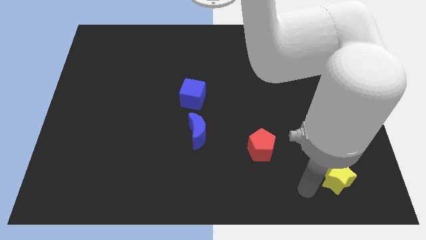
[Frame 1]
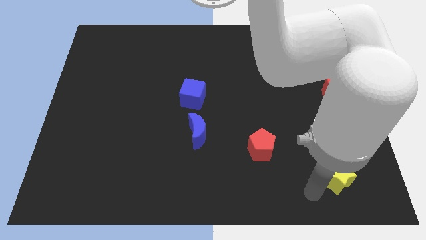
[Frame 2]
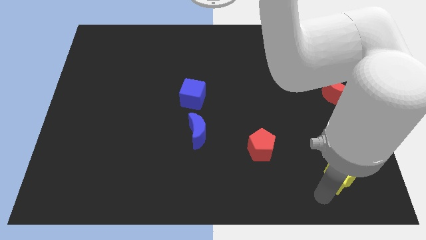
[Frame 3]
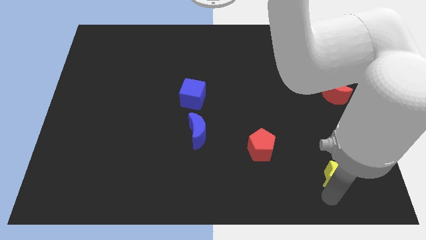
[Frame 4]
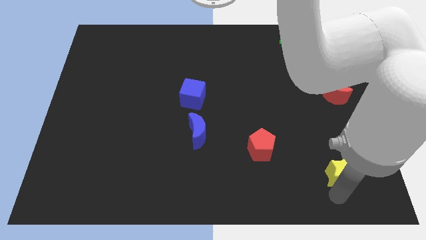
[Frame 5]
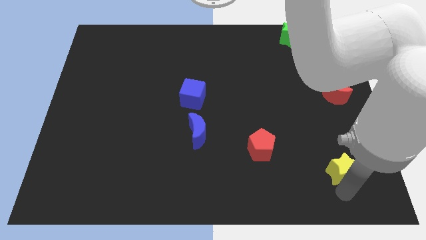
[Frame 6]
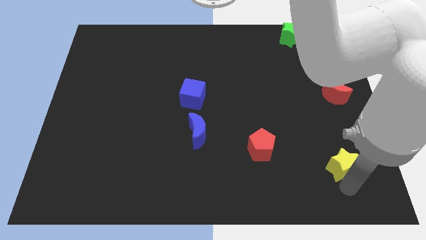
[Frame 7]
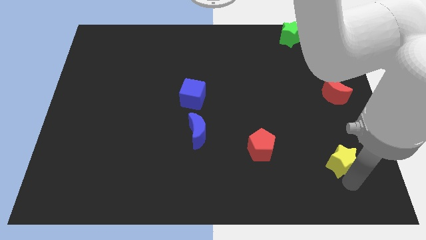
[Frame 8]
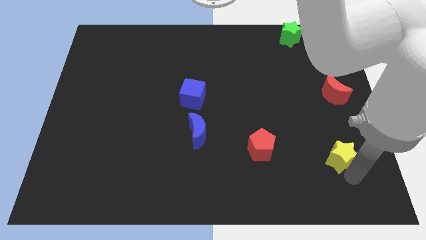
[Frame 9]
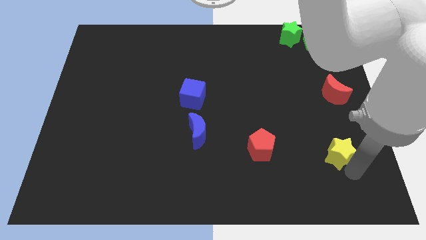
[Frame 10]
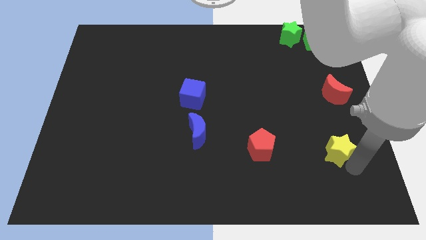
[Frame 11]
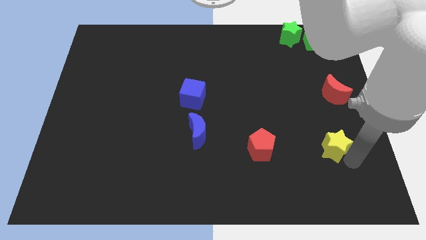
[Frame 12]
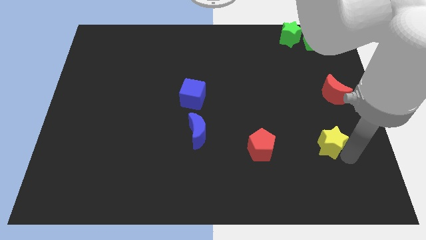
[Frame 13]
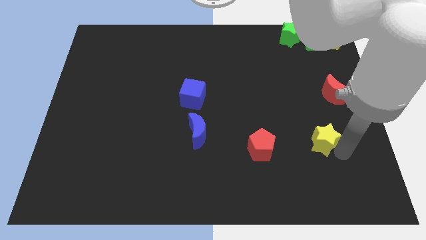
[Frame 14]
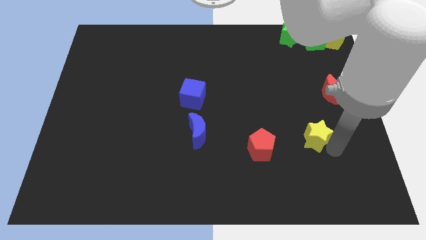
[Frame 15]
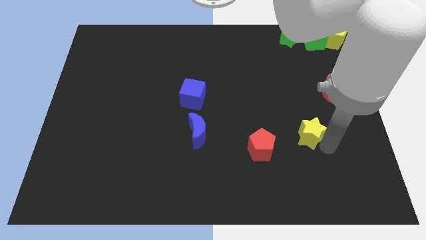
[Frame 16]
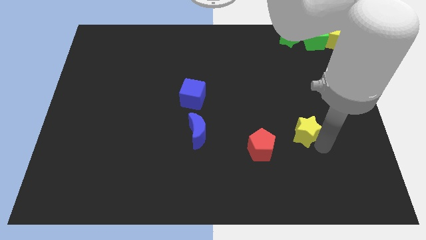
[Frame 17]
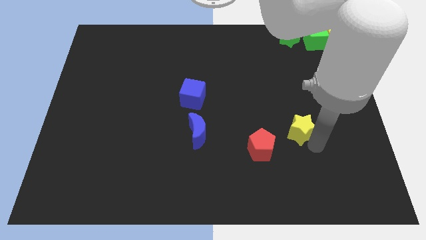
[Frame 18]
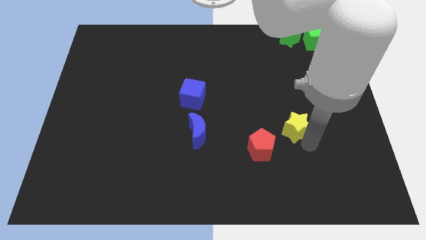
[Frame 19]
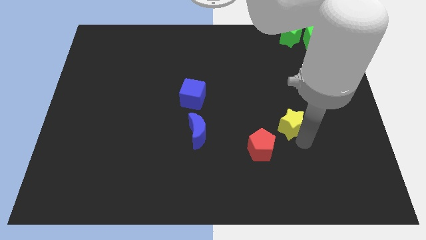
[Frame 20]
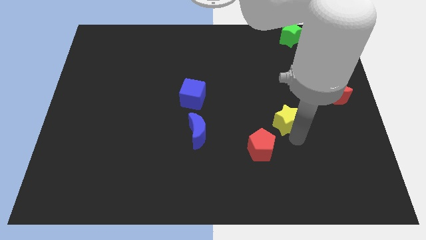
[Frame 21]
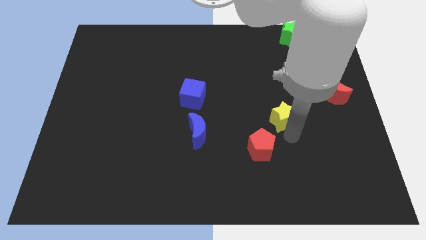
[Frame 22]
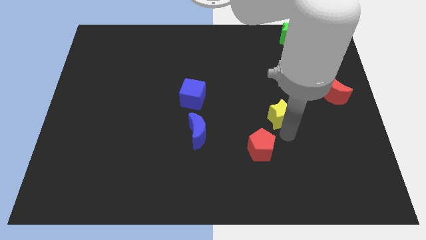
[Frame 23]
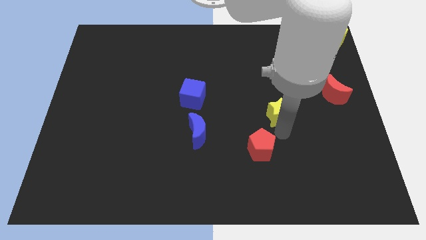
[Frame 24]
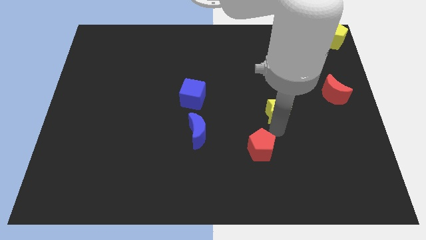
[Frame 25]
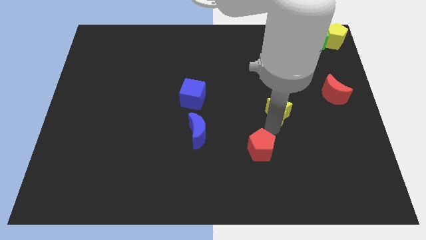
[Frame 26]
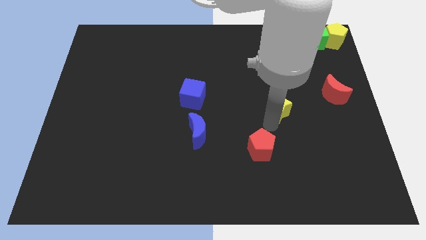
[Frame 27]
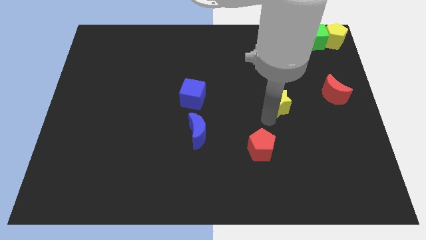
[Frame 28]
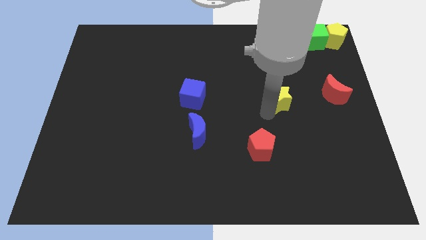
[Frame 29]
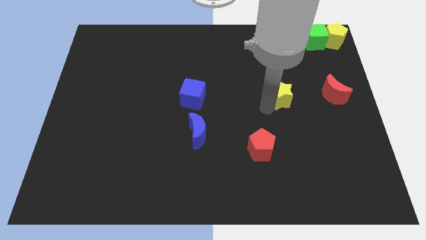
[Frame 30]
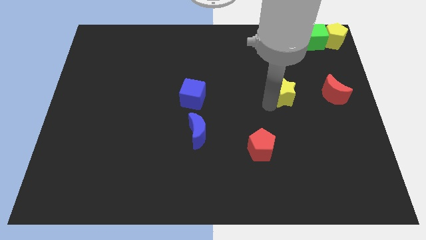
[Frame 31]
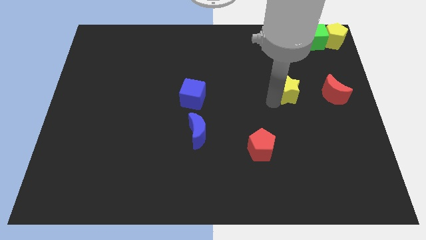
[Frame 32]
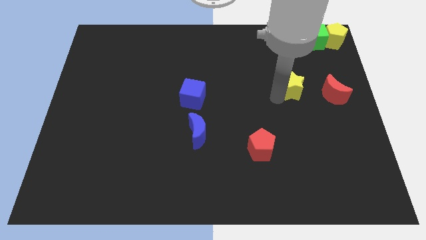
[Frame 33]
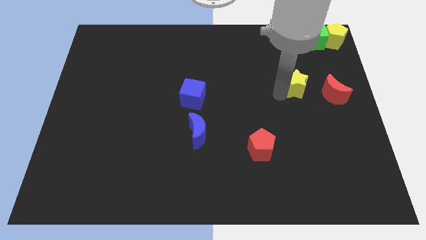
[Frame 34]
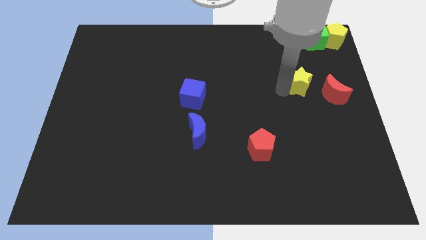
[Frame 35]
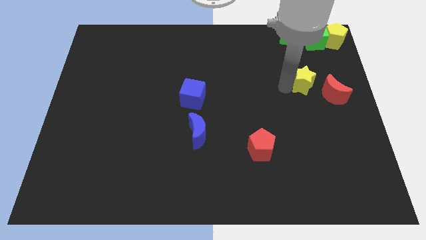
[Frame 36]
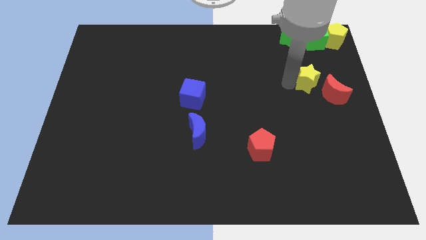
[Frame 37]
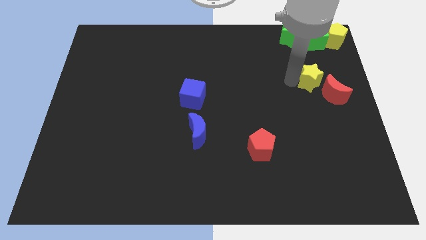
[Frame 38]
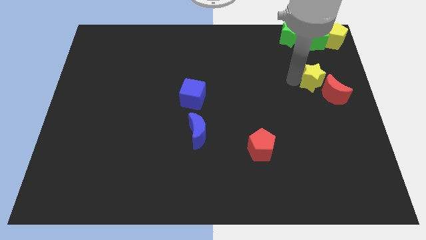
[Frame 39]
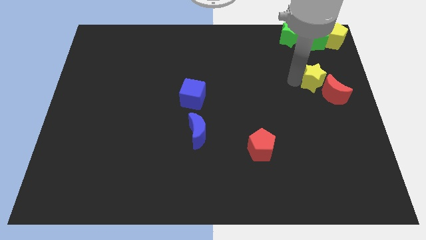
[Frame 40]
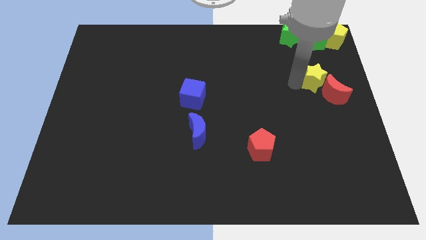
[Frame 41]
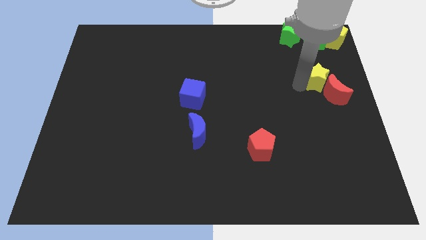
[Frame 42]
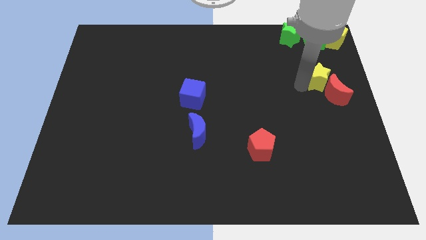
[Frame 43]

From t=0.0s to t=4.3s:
touch the left top side of the red moon with the yellow star

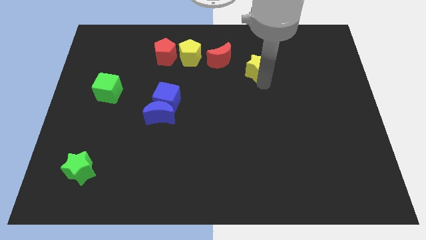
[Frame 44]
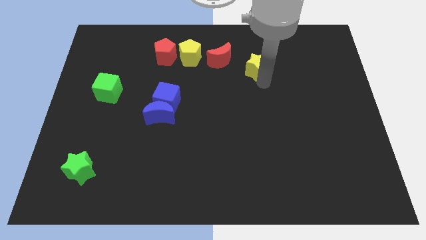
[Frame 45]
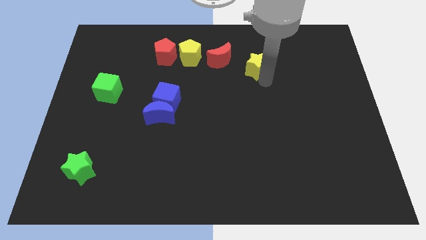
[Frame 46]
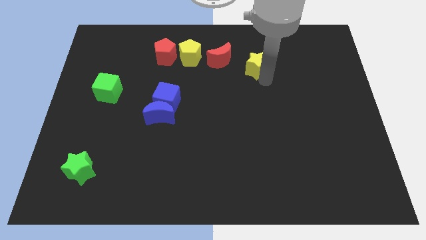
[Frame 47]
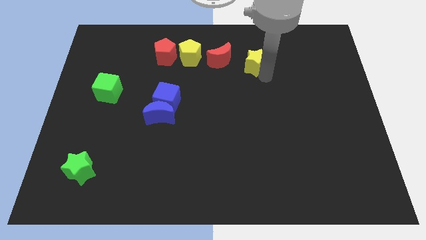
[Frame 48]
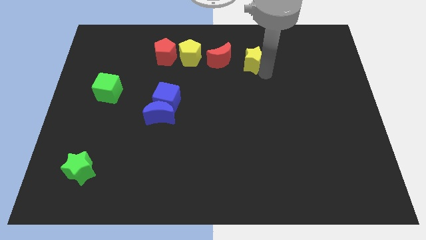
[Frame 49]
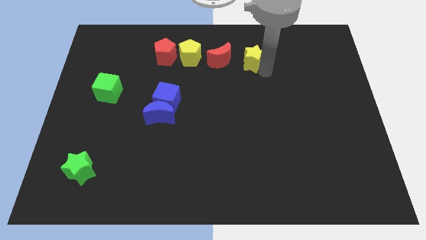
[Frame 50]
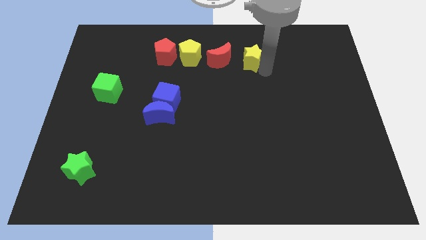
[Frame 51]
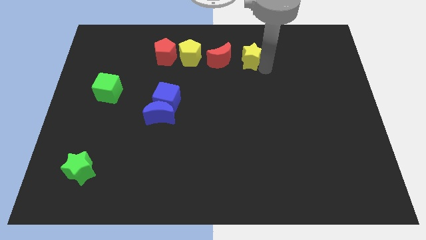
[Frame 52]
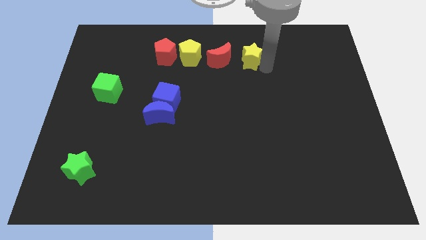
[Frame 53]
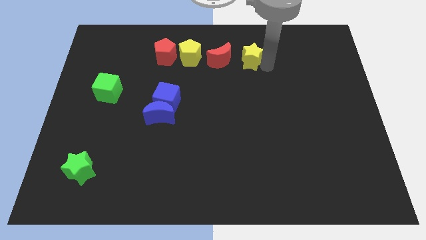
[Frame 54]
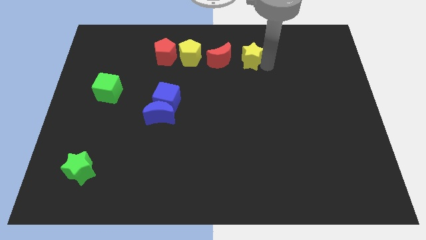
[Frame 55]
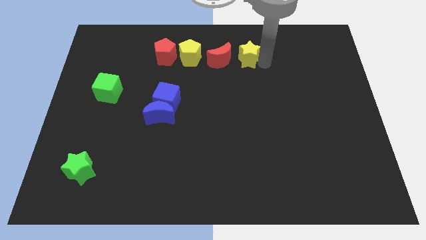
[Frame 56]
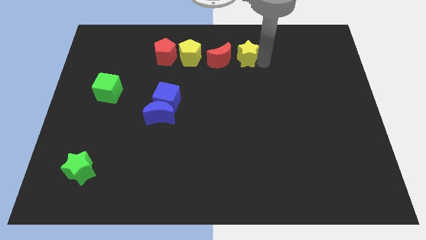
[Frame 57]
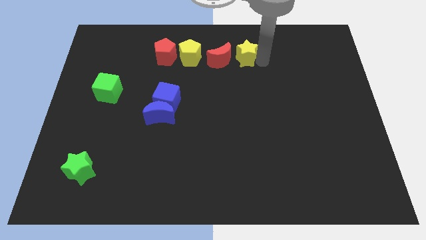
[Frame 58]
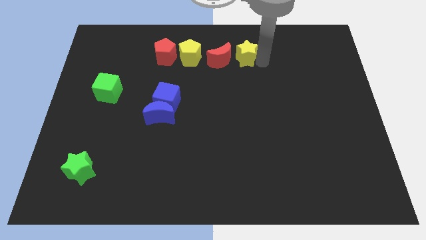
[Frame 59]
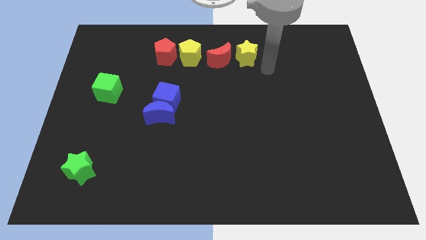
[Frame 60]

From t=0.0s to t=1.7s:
move the yellow star to the right side of the red crescent

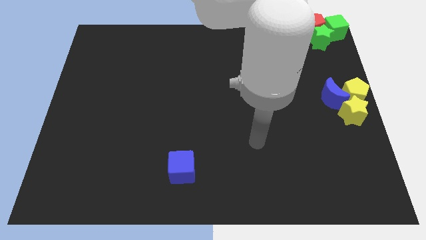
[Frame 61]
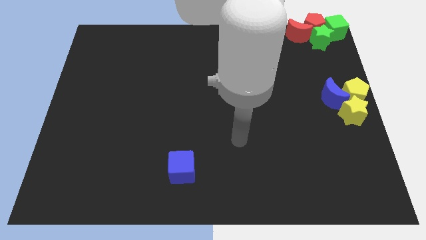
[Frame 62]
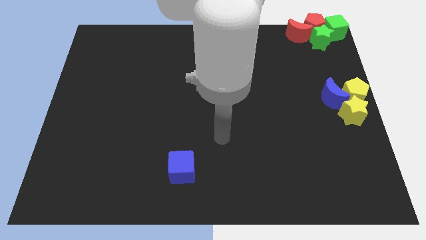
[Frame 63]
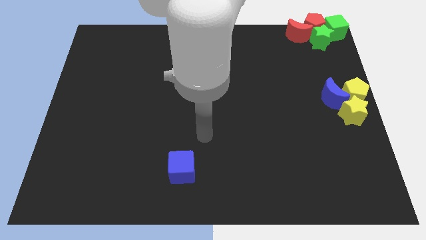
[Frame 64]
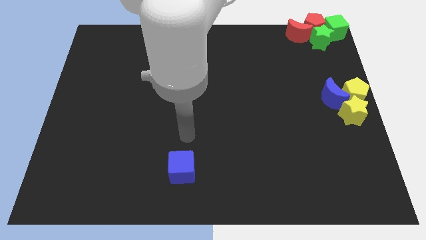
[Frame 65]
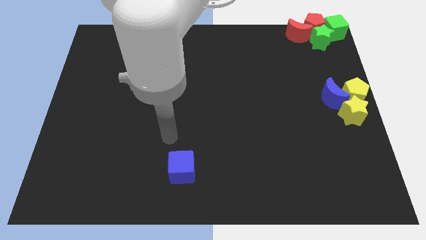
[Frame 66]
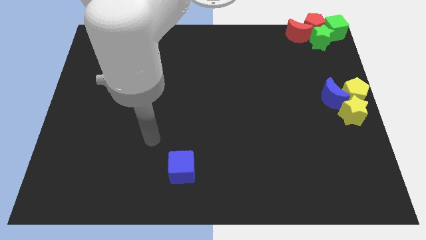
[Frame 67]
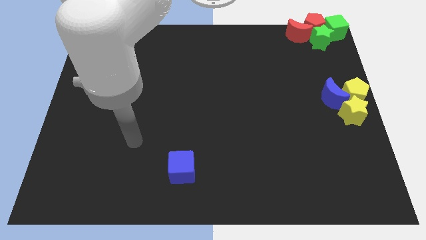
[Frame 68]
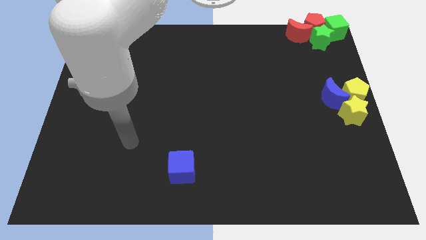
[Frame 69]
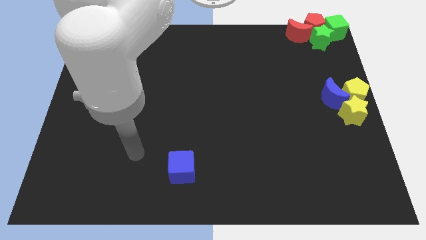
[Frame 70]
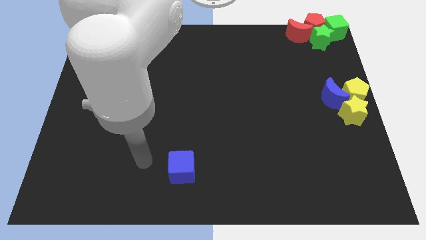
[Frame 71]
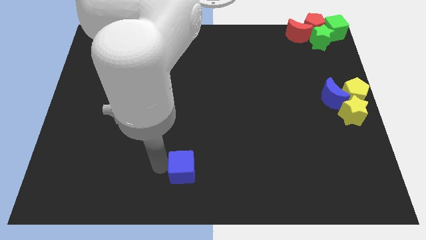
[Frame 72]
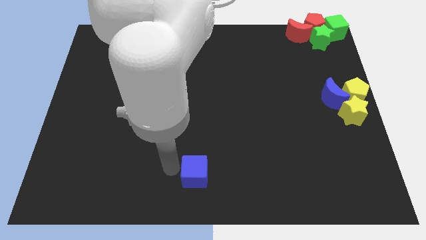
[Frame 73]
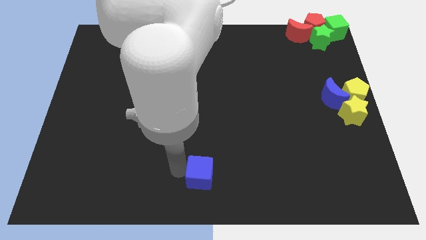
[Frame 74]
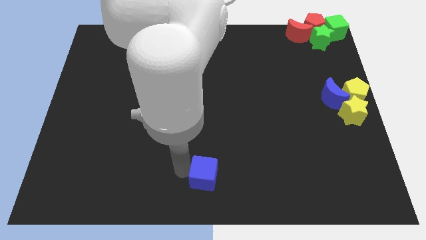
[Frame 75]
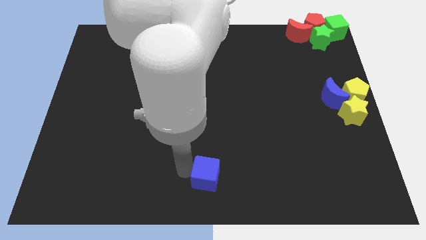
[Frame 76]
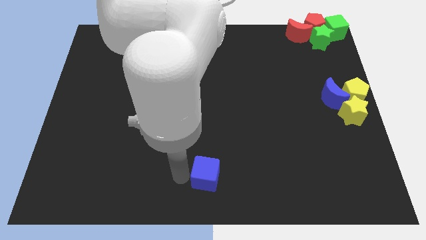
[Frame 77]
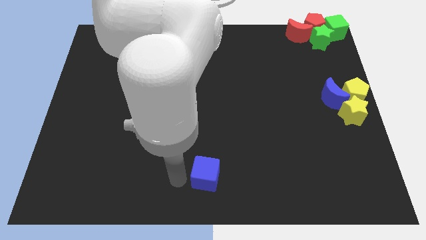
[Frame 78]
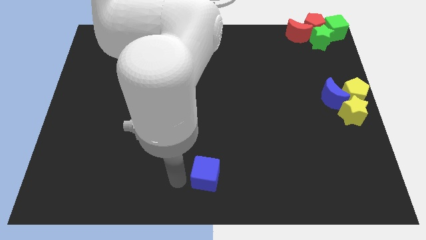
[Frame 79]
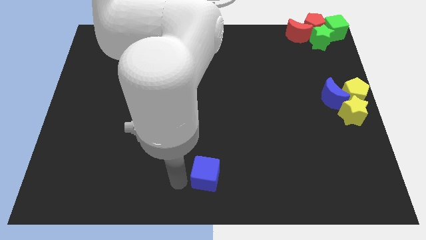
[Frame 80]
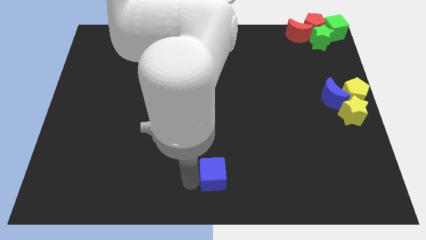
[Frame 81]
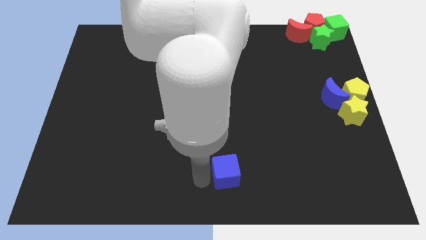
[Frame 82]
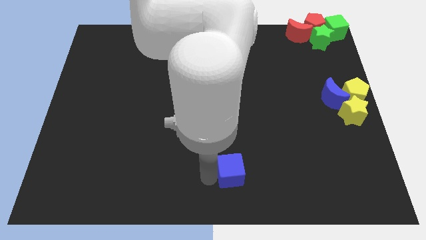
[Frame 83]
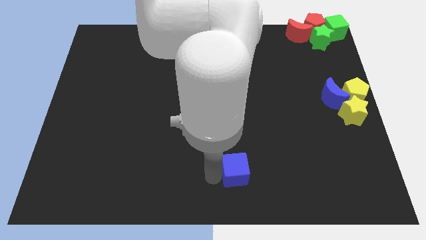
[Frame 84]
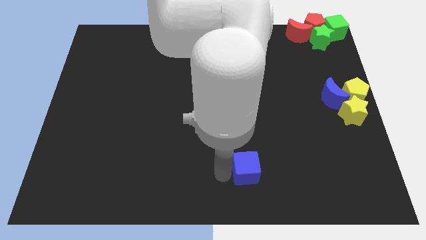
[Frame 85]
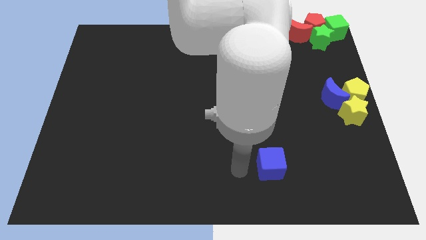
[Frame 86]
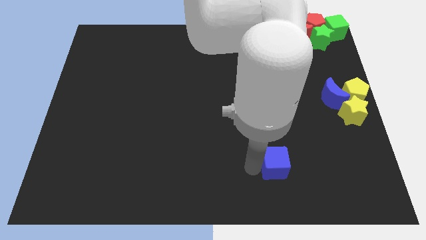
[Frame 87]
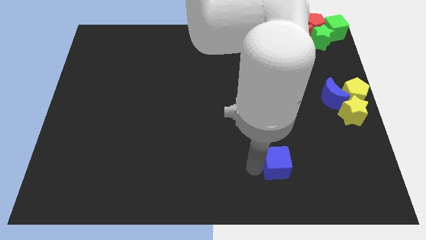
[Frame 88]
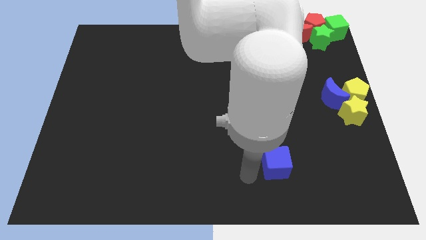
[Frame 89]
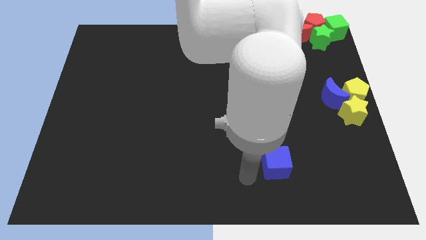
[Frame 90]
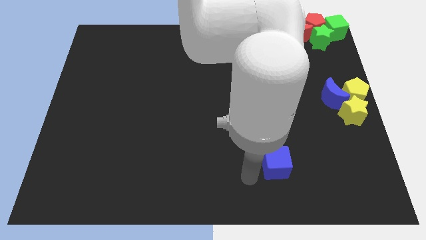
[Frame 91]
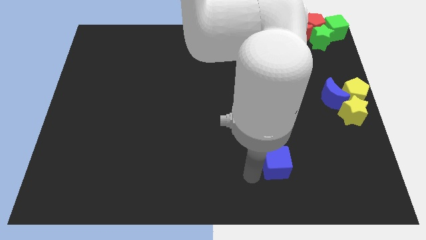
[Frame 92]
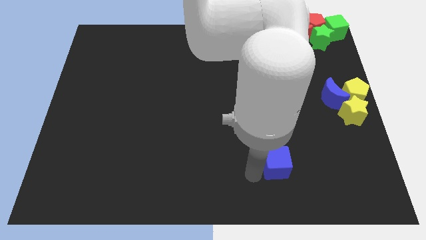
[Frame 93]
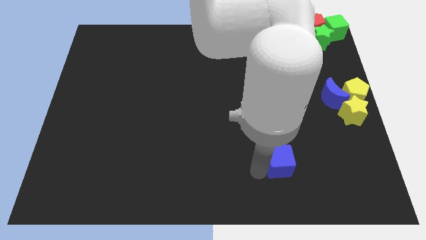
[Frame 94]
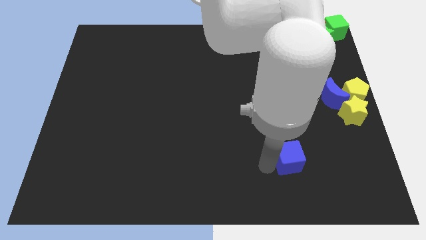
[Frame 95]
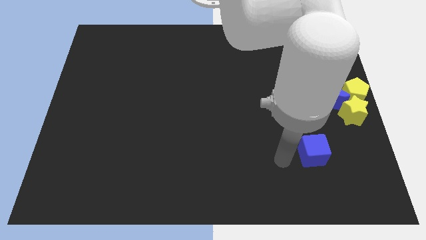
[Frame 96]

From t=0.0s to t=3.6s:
move blue cube towards yellow star
